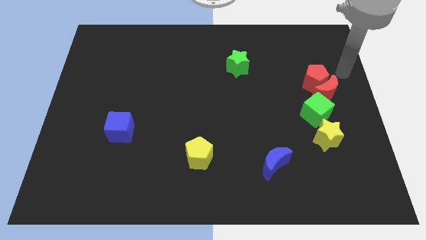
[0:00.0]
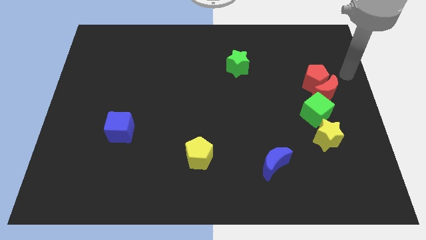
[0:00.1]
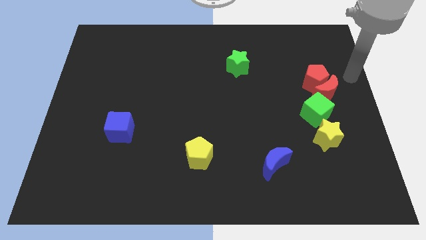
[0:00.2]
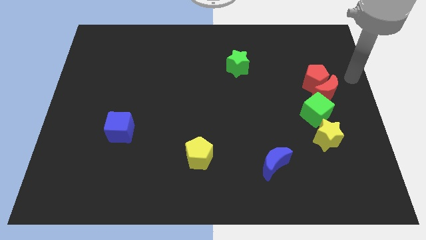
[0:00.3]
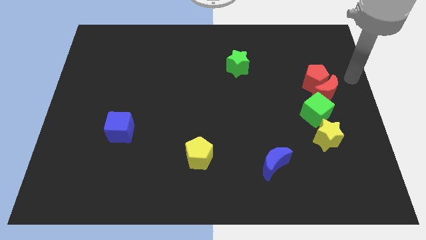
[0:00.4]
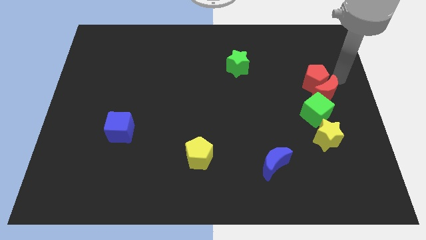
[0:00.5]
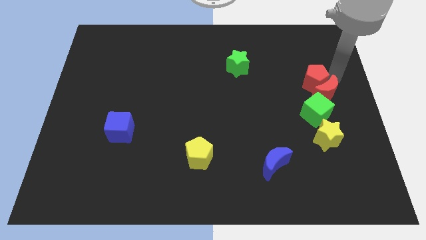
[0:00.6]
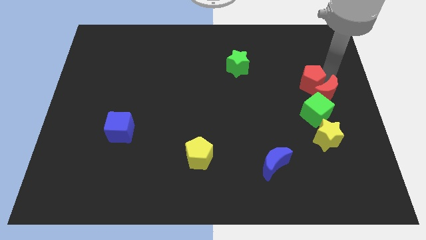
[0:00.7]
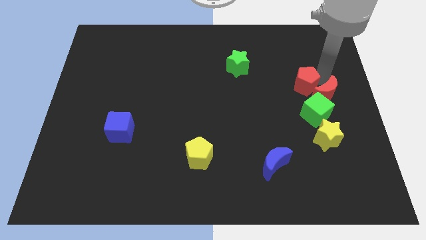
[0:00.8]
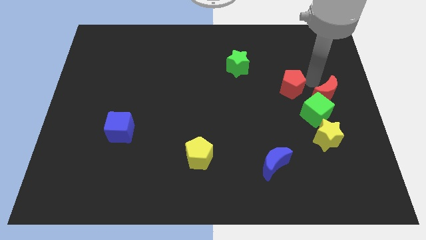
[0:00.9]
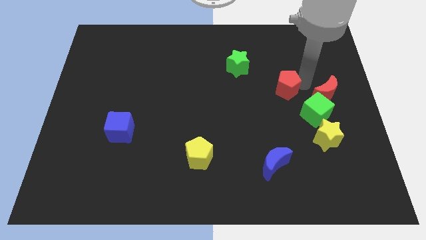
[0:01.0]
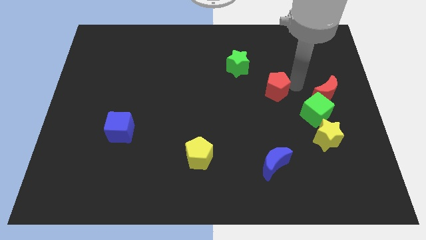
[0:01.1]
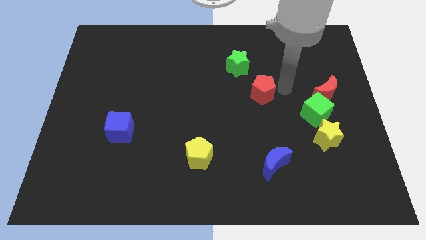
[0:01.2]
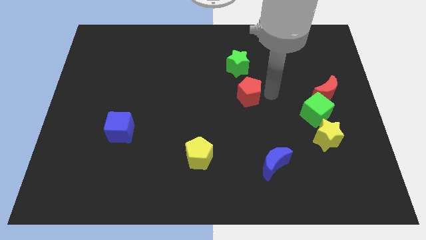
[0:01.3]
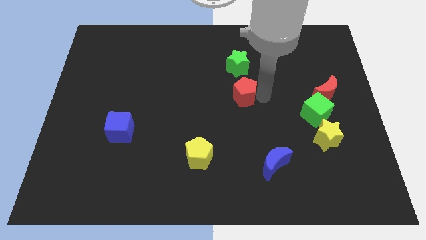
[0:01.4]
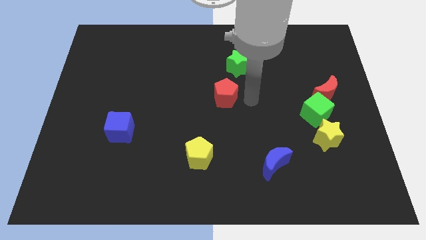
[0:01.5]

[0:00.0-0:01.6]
push red pentagon below green task

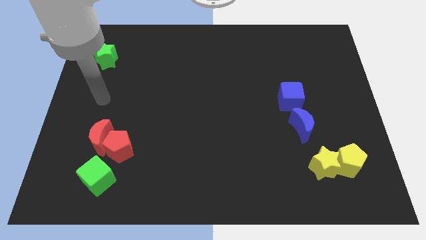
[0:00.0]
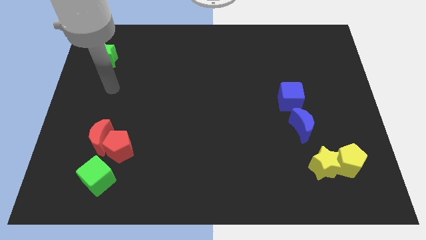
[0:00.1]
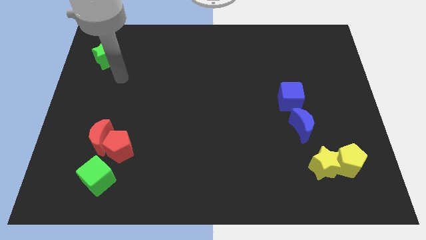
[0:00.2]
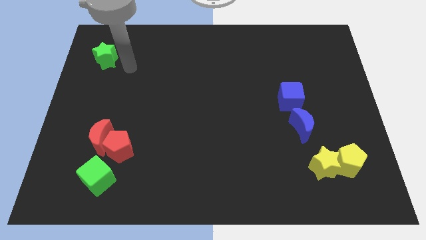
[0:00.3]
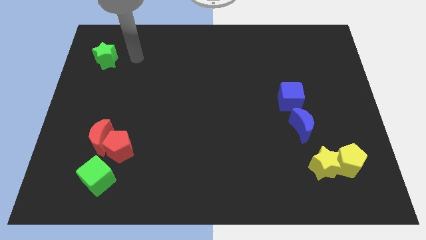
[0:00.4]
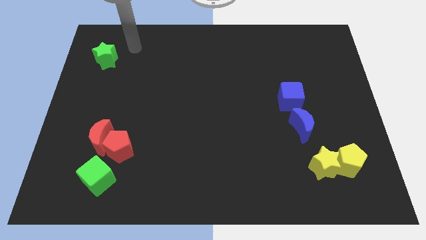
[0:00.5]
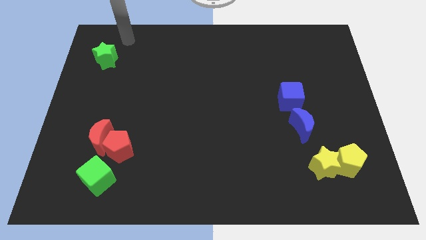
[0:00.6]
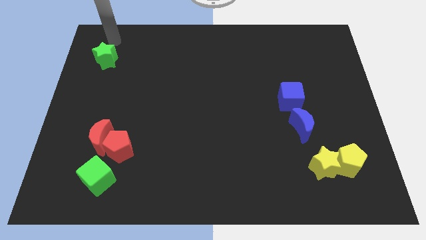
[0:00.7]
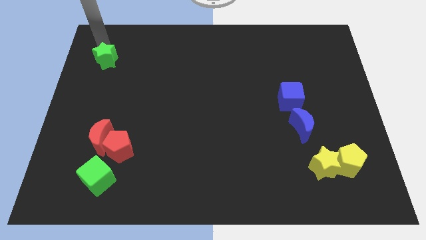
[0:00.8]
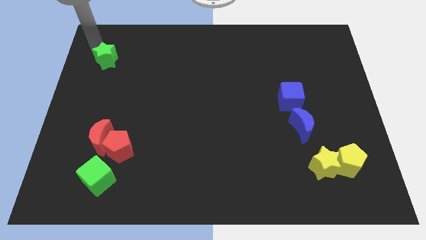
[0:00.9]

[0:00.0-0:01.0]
point the arm at the top side of the green star

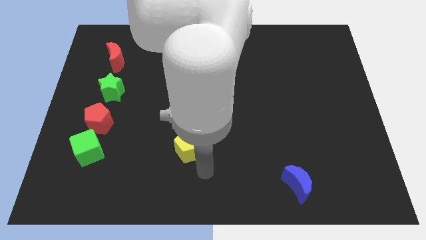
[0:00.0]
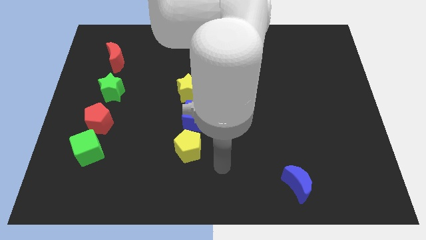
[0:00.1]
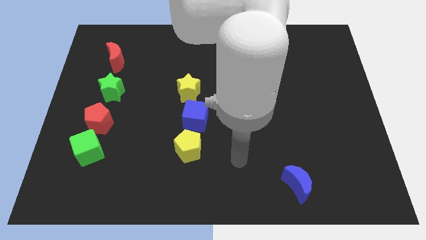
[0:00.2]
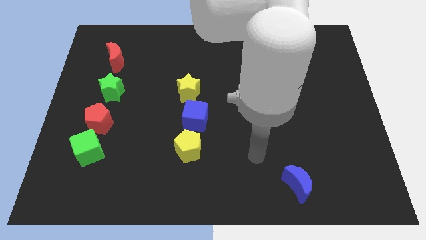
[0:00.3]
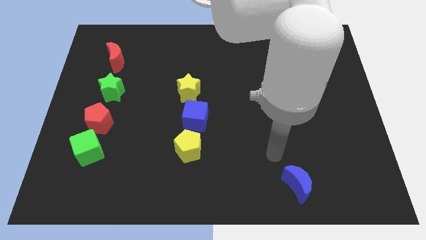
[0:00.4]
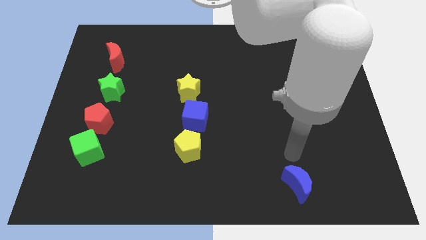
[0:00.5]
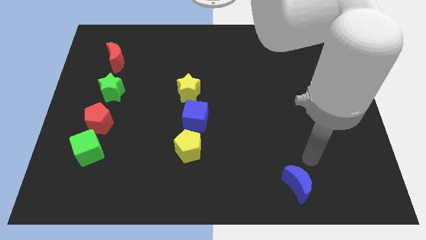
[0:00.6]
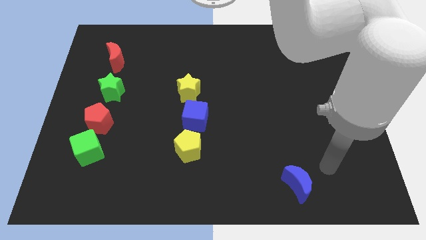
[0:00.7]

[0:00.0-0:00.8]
move your hand towards the blue crescent

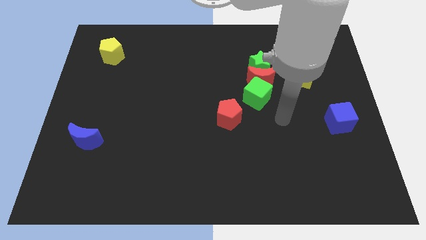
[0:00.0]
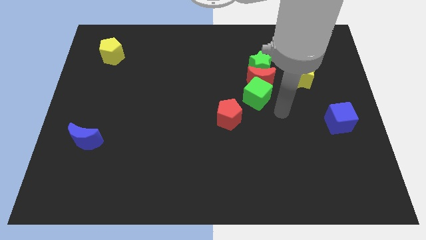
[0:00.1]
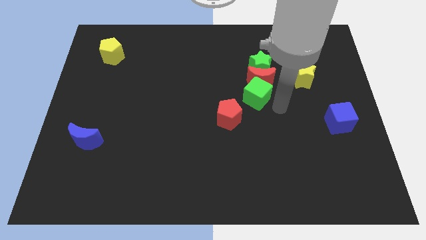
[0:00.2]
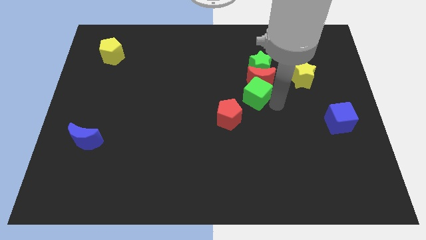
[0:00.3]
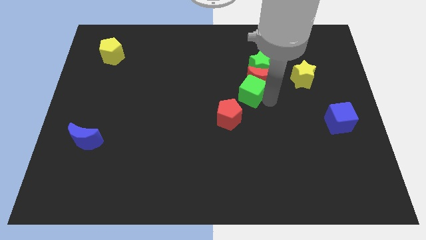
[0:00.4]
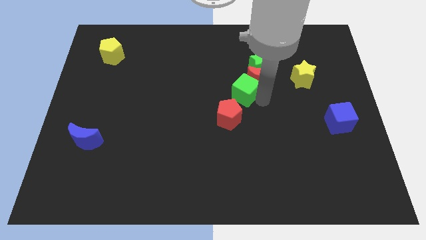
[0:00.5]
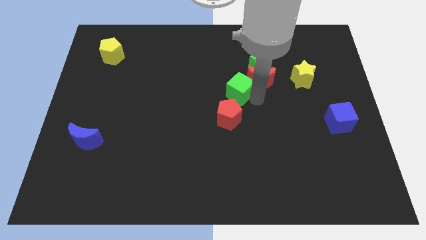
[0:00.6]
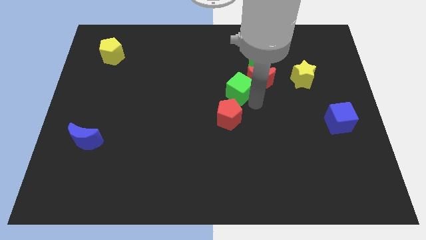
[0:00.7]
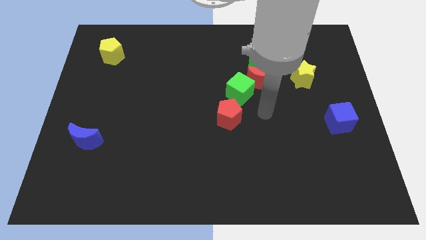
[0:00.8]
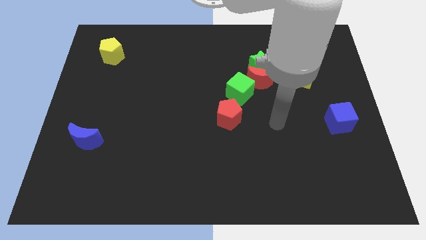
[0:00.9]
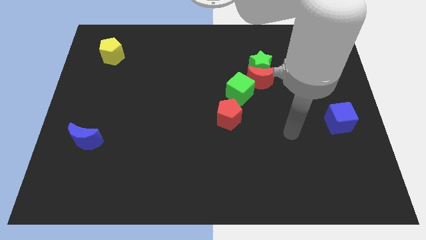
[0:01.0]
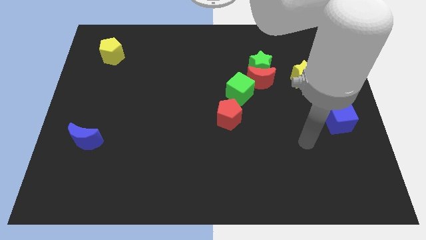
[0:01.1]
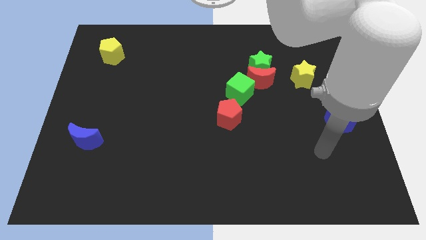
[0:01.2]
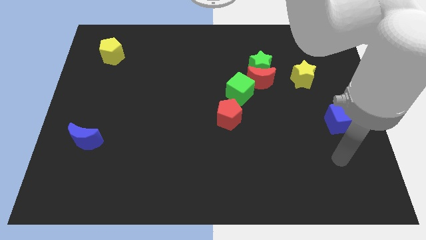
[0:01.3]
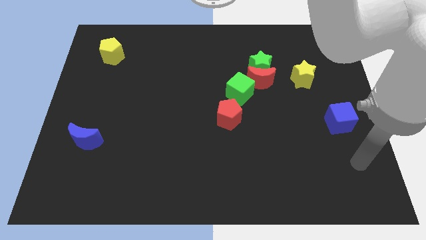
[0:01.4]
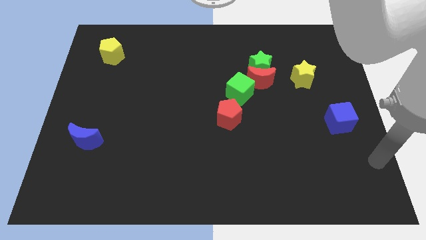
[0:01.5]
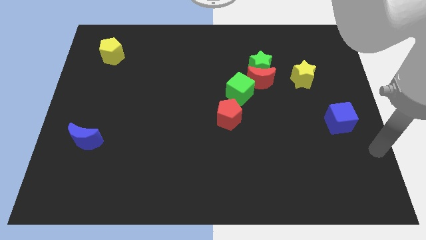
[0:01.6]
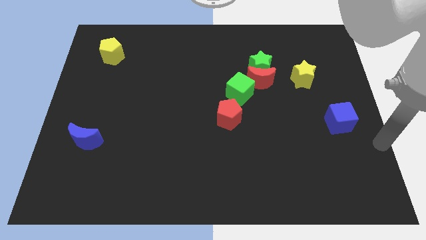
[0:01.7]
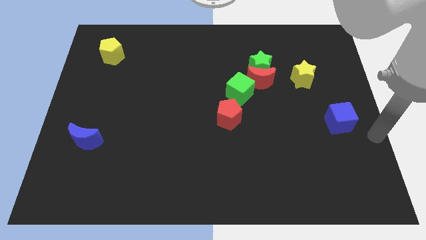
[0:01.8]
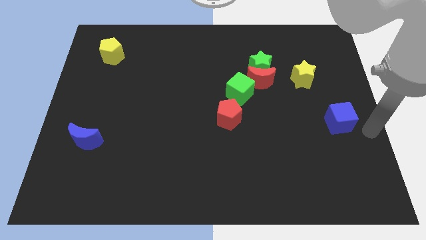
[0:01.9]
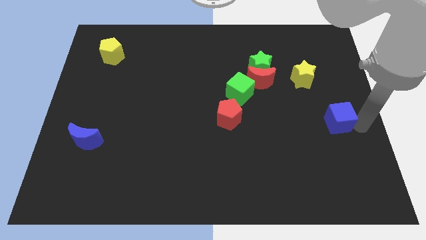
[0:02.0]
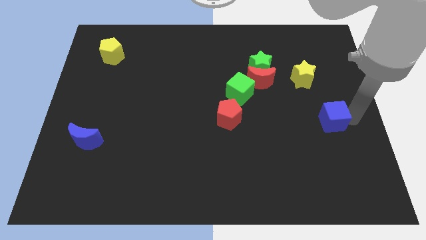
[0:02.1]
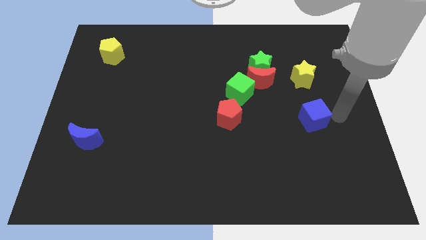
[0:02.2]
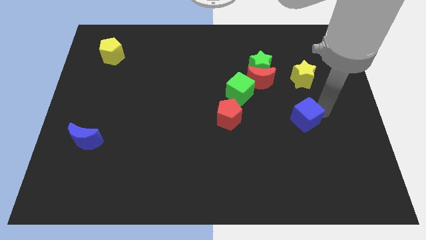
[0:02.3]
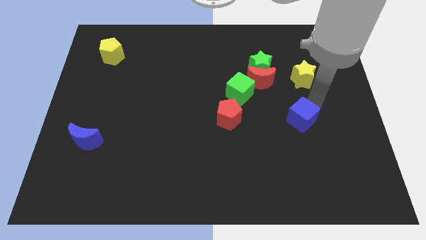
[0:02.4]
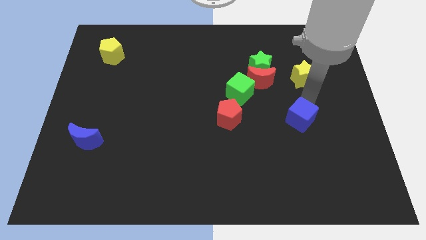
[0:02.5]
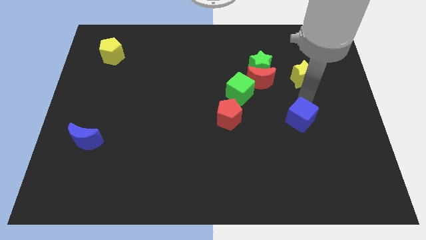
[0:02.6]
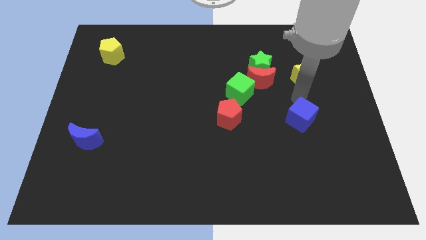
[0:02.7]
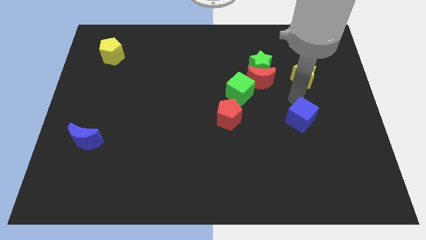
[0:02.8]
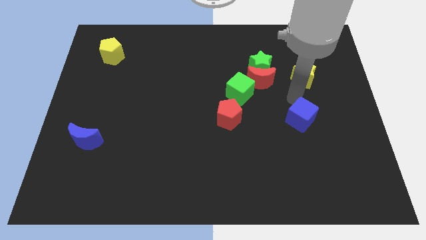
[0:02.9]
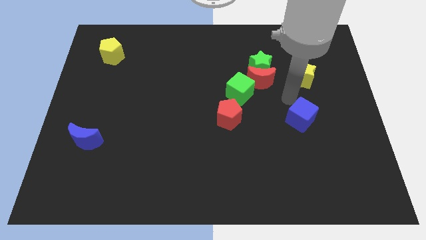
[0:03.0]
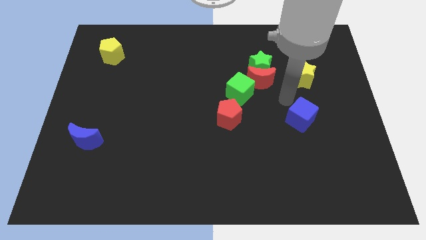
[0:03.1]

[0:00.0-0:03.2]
put the blue cube below the yellow star

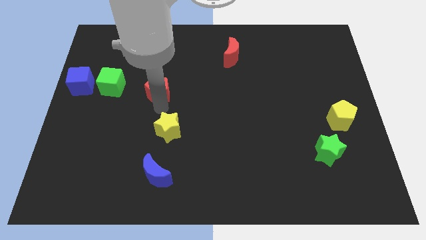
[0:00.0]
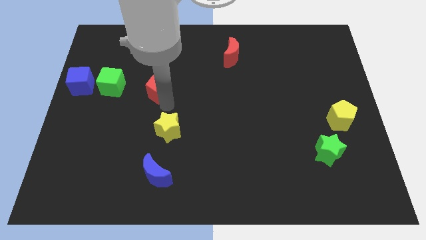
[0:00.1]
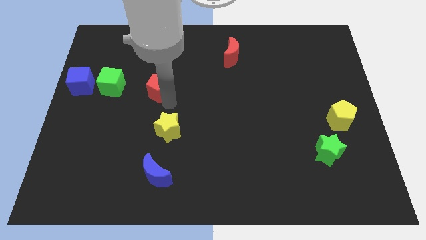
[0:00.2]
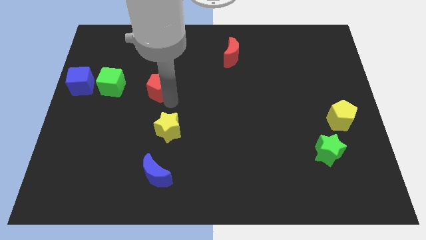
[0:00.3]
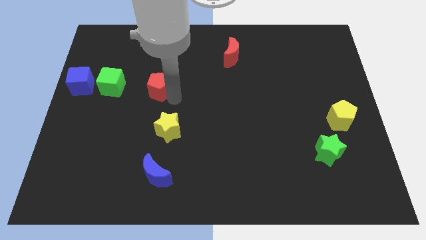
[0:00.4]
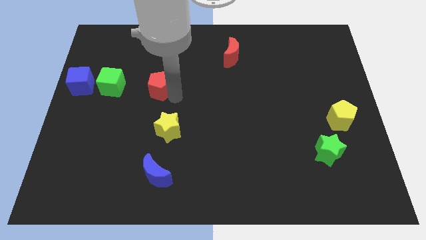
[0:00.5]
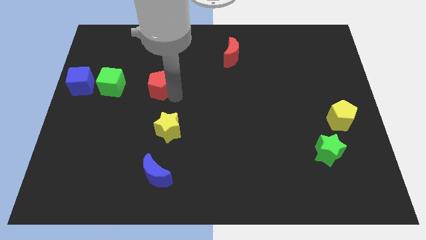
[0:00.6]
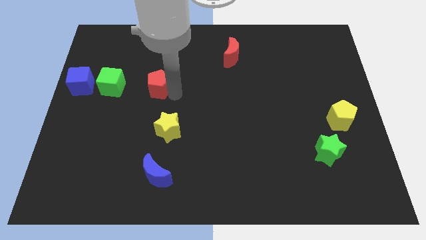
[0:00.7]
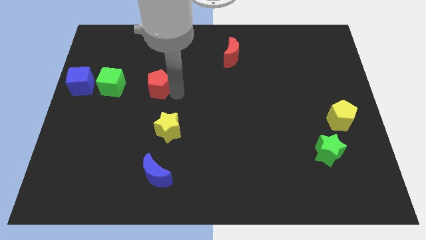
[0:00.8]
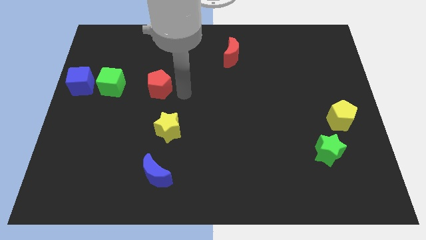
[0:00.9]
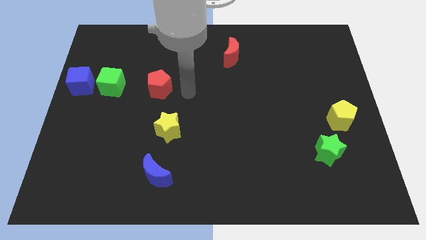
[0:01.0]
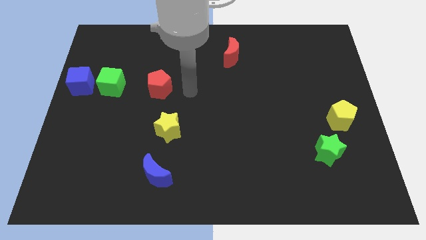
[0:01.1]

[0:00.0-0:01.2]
move the red pentagon to the right of the green cube

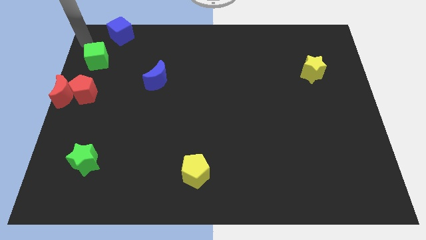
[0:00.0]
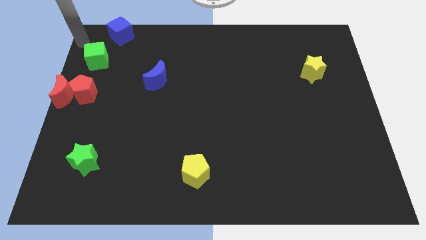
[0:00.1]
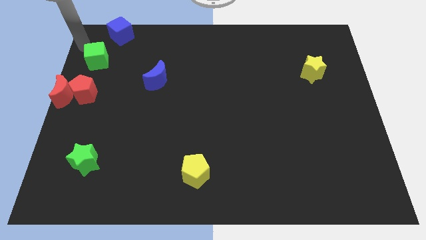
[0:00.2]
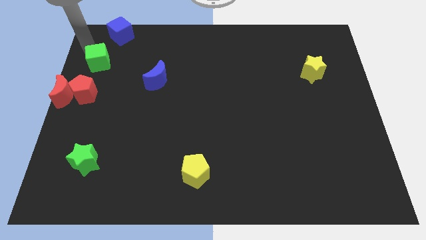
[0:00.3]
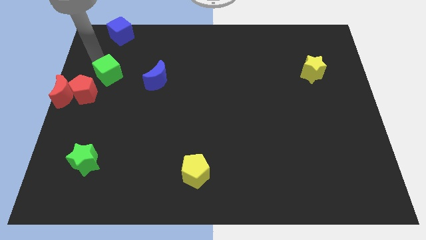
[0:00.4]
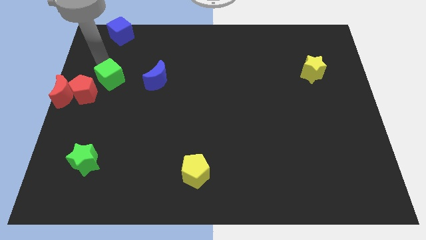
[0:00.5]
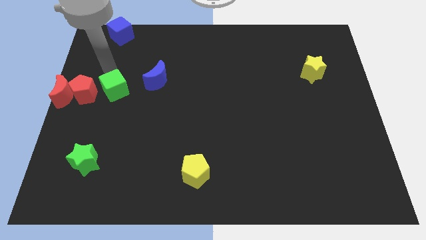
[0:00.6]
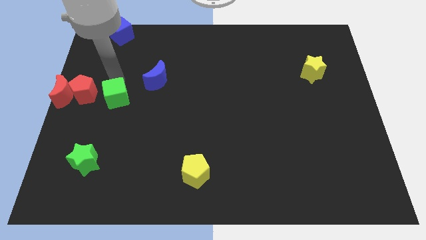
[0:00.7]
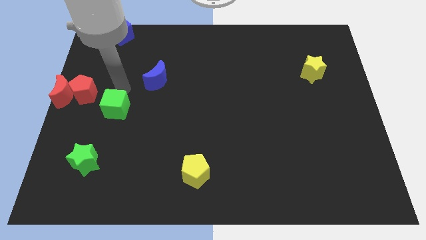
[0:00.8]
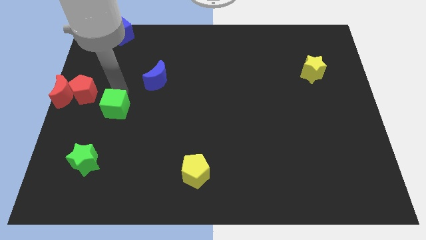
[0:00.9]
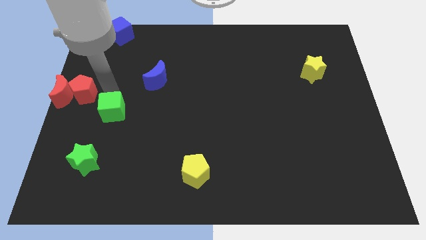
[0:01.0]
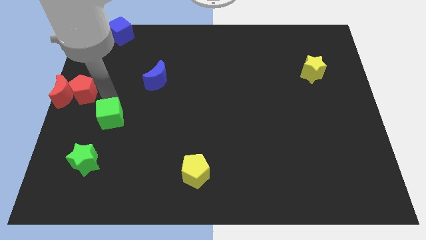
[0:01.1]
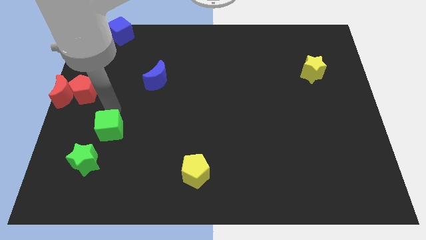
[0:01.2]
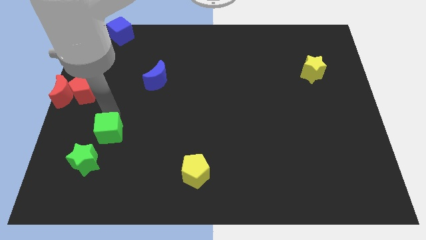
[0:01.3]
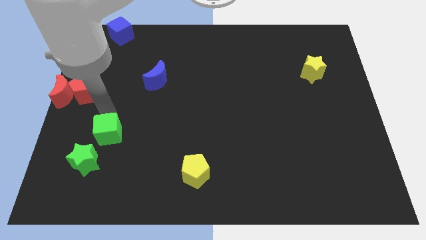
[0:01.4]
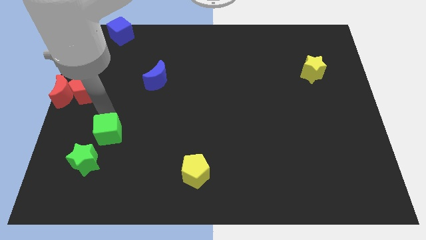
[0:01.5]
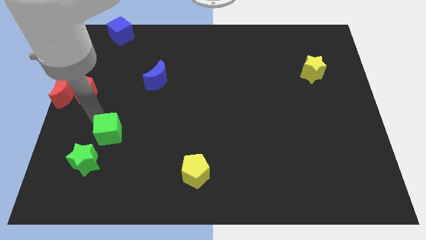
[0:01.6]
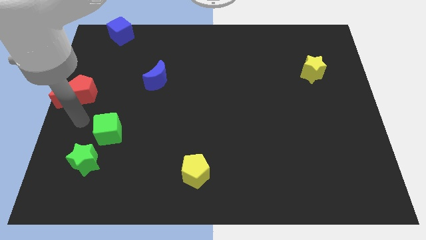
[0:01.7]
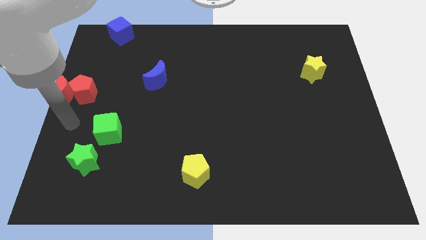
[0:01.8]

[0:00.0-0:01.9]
place the green block at the top of the green star
